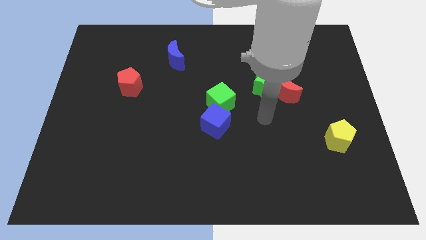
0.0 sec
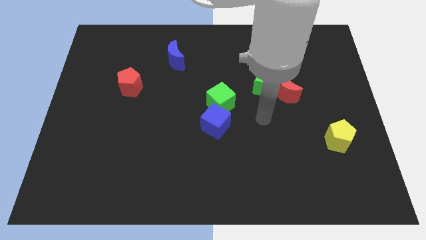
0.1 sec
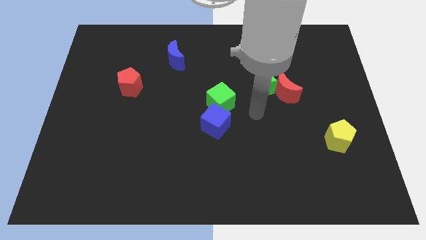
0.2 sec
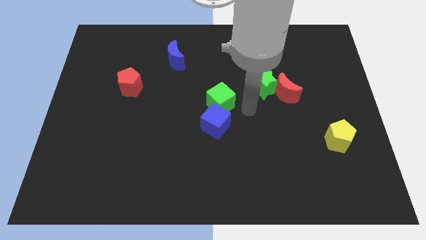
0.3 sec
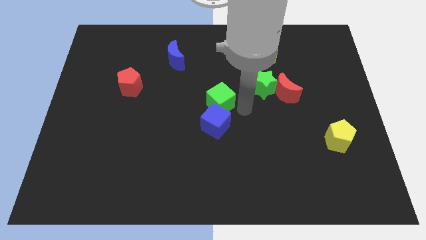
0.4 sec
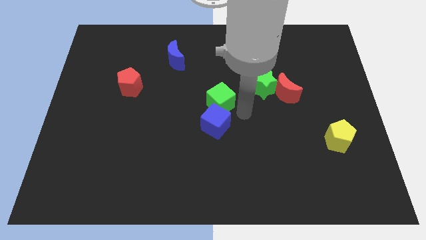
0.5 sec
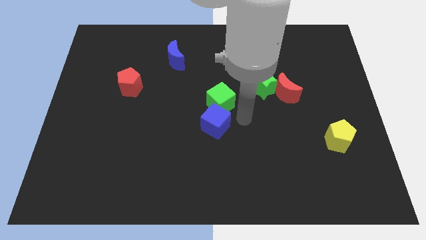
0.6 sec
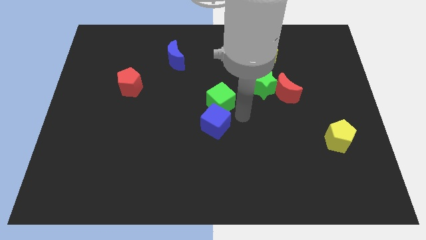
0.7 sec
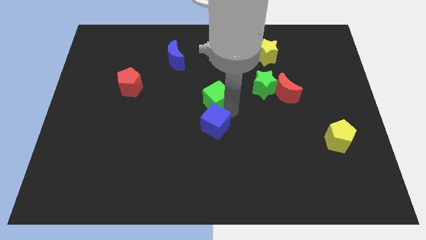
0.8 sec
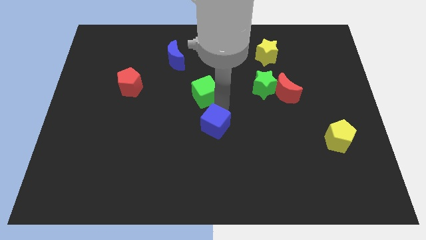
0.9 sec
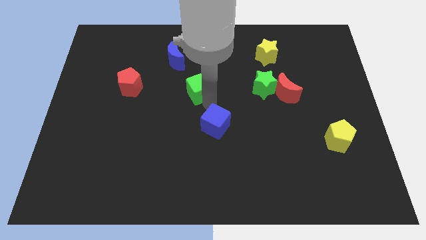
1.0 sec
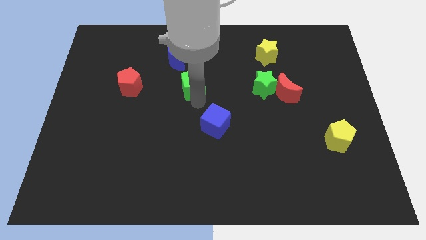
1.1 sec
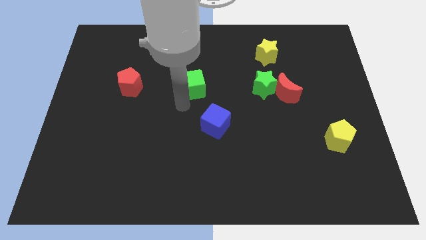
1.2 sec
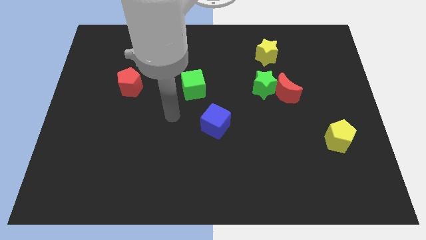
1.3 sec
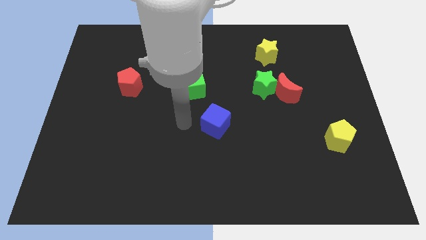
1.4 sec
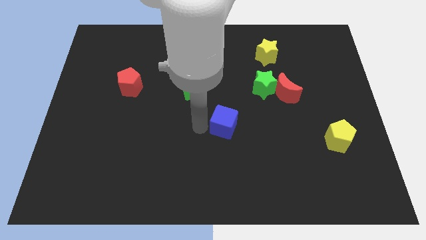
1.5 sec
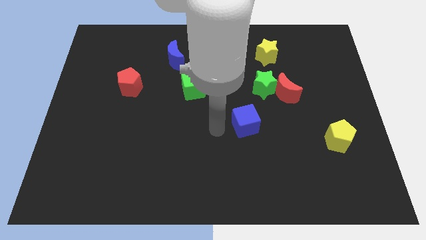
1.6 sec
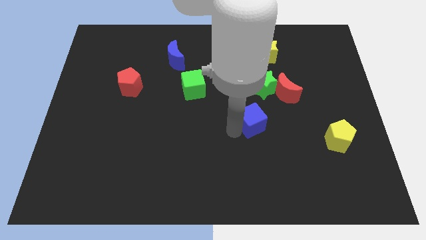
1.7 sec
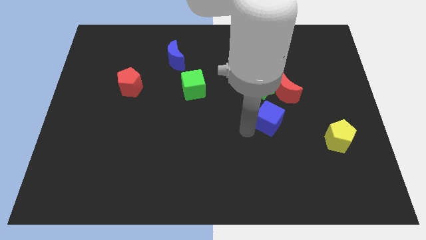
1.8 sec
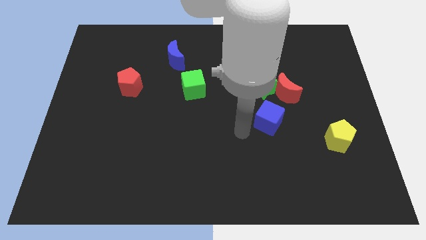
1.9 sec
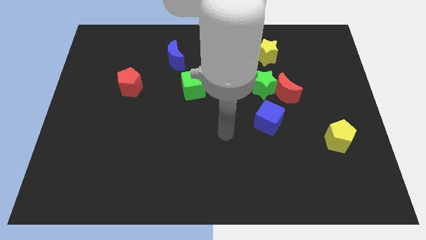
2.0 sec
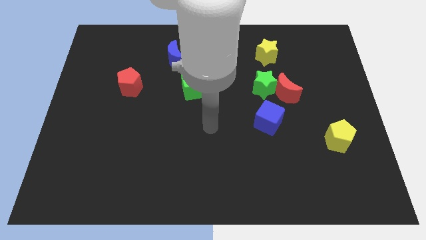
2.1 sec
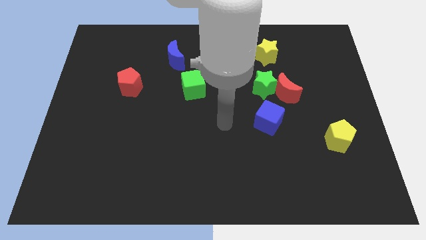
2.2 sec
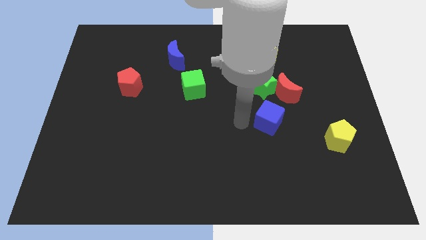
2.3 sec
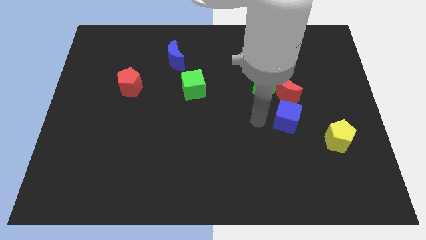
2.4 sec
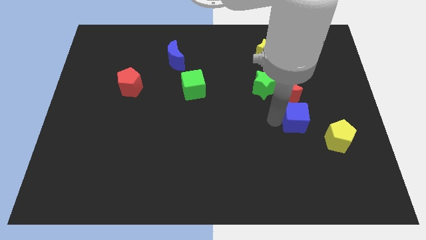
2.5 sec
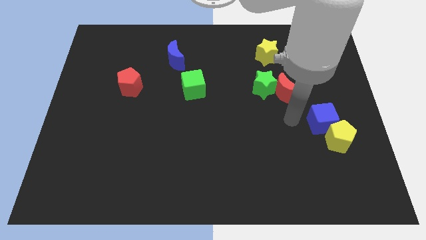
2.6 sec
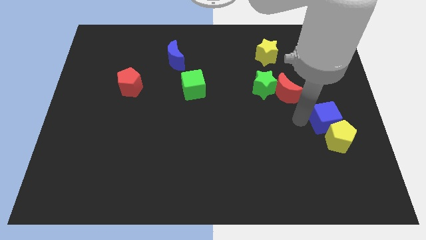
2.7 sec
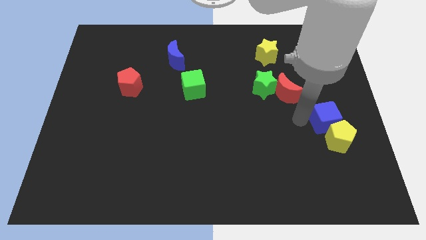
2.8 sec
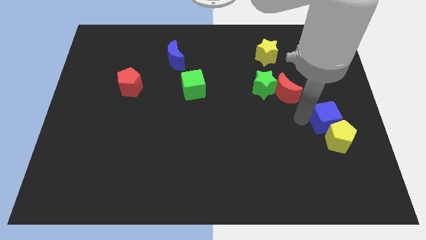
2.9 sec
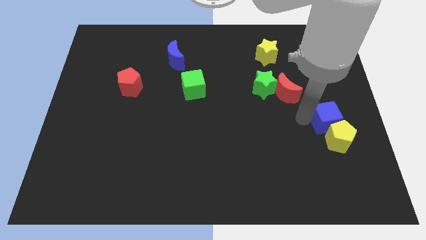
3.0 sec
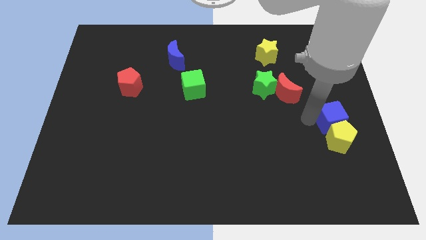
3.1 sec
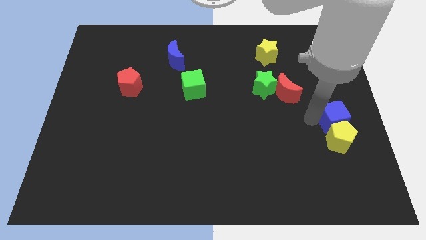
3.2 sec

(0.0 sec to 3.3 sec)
put the blue cube and yellow pentagon together

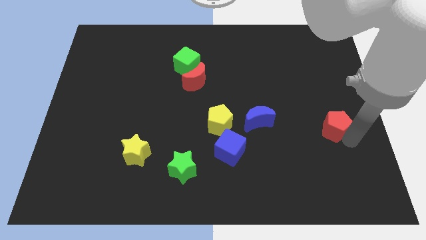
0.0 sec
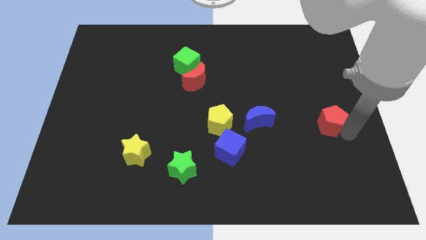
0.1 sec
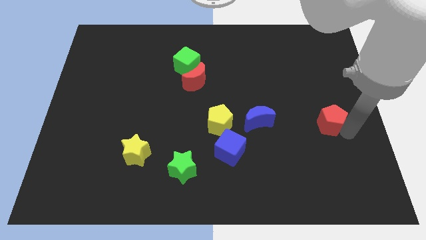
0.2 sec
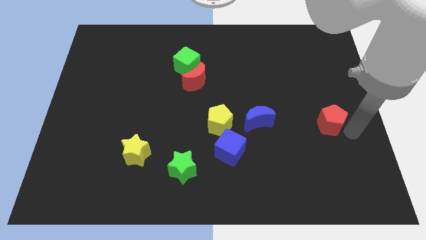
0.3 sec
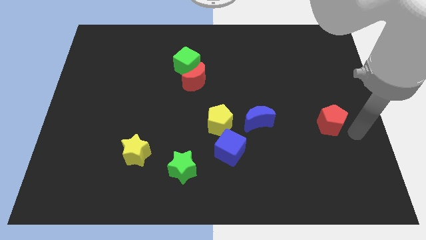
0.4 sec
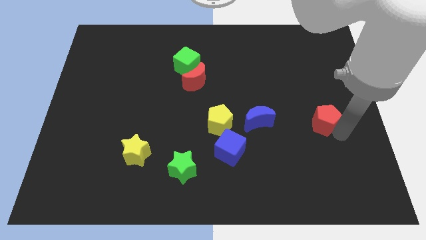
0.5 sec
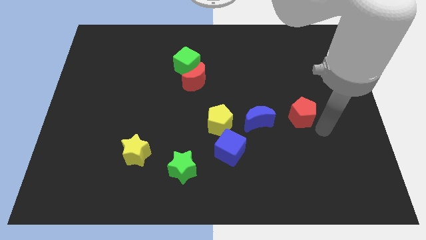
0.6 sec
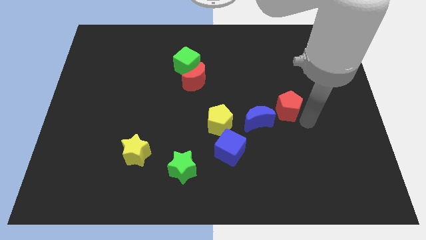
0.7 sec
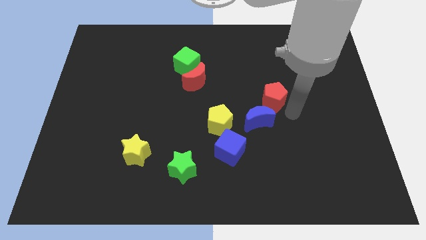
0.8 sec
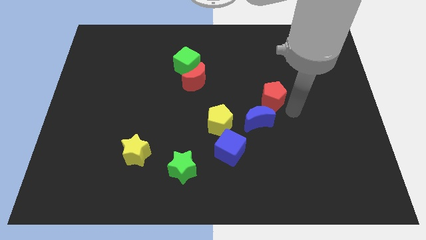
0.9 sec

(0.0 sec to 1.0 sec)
place the red pentagon diagonally to the blue moon

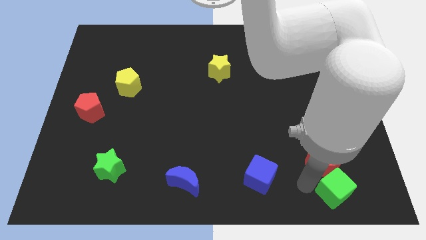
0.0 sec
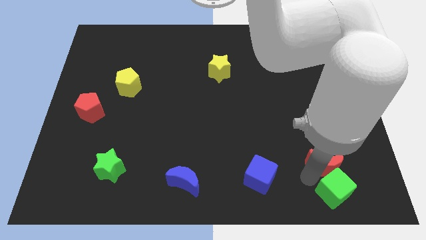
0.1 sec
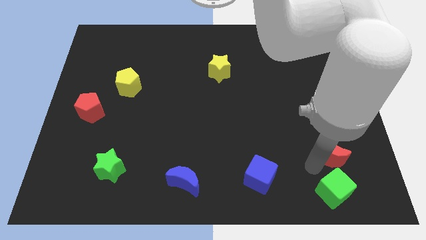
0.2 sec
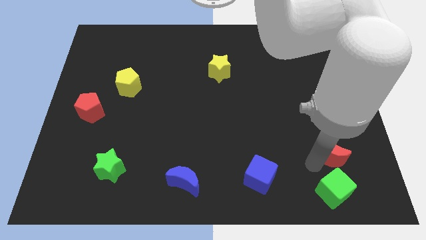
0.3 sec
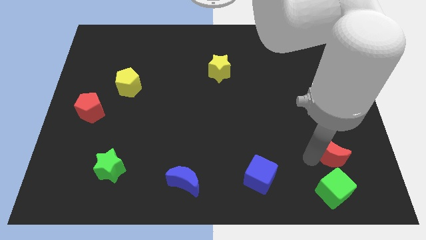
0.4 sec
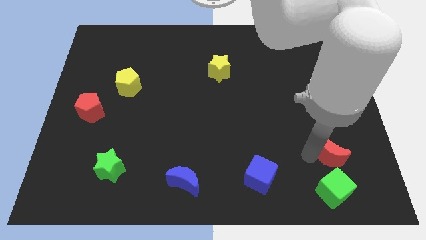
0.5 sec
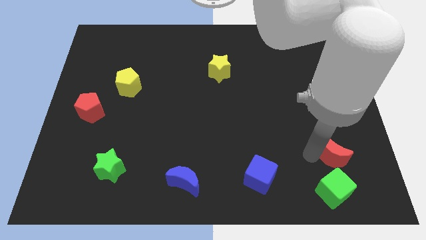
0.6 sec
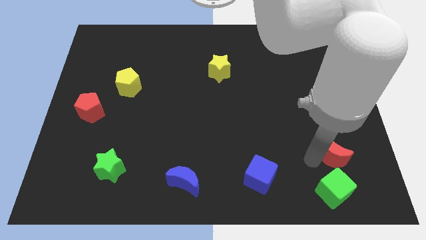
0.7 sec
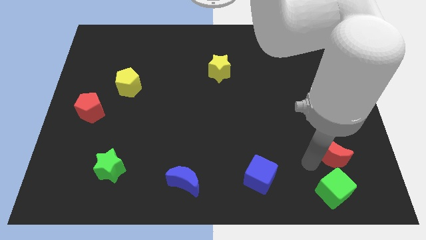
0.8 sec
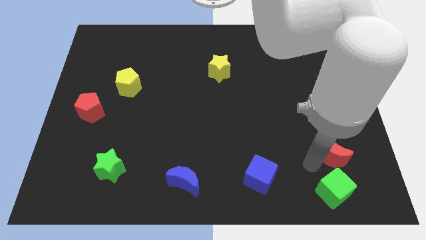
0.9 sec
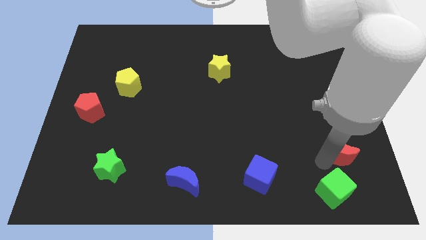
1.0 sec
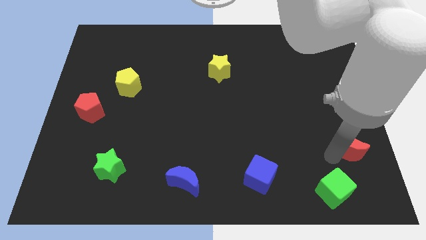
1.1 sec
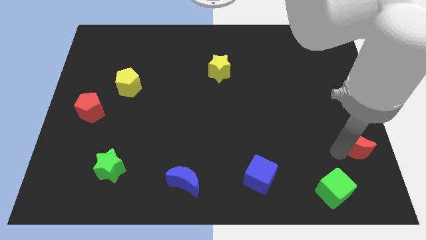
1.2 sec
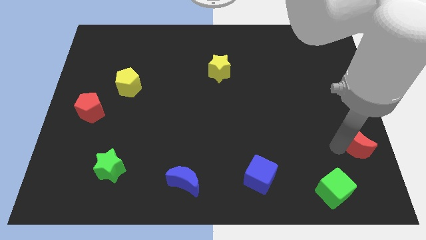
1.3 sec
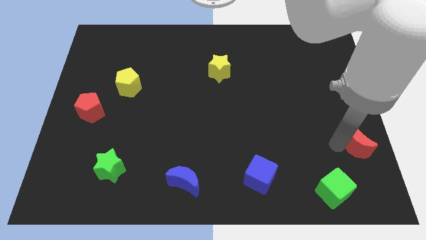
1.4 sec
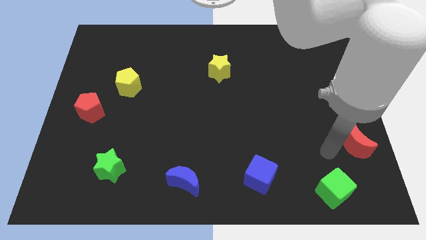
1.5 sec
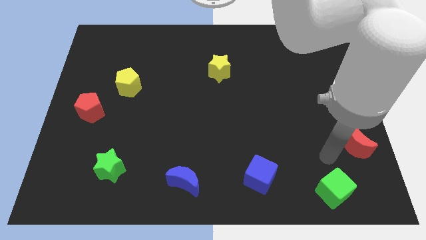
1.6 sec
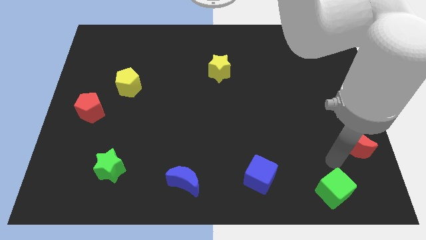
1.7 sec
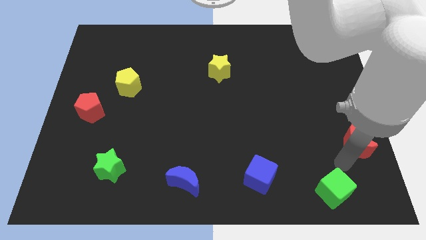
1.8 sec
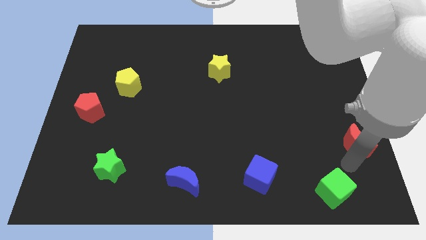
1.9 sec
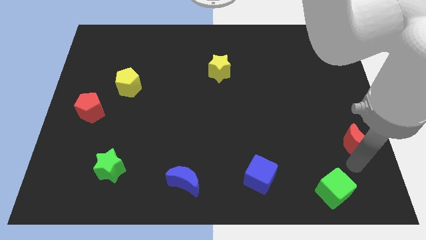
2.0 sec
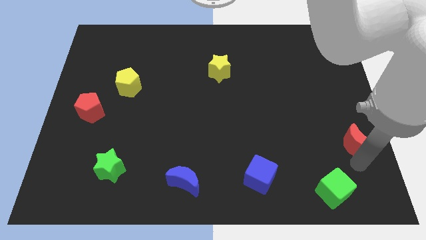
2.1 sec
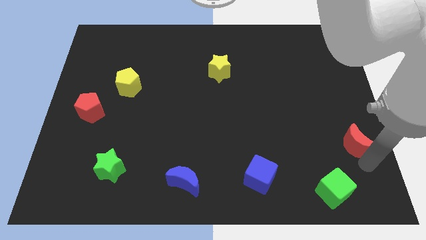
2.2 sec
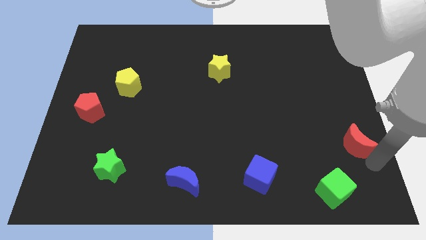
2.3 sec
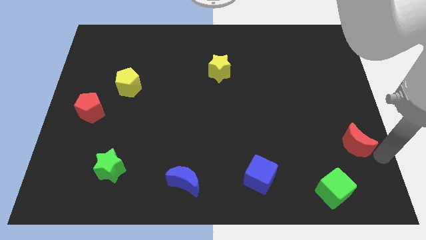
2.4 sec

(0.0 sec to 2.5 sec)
separate the red crescent from green cube

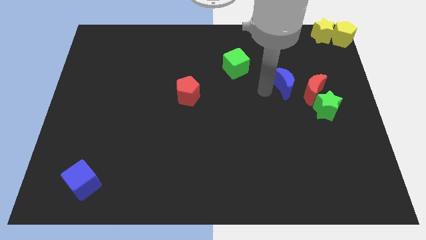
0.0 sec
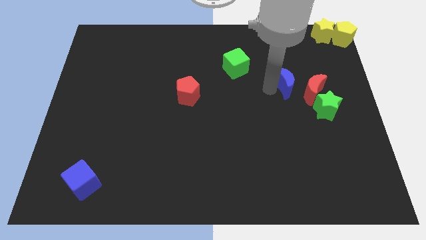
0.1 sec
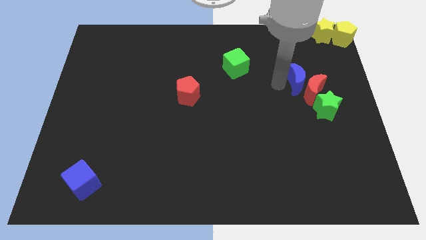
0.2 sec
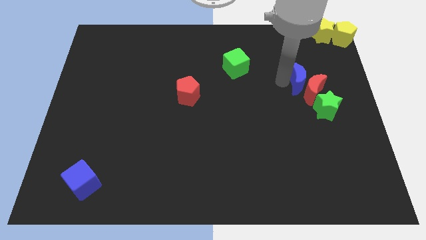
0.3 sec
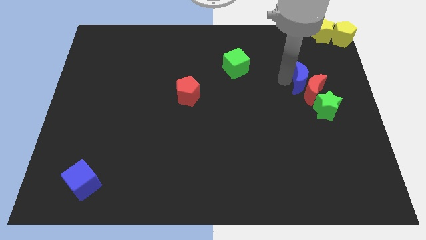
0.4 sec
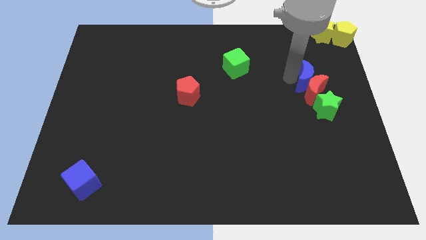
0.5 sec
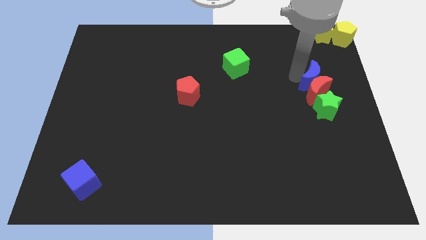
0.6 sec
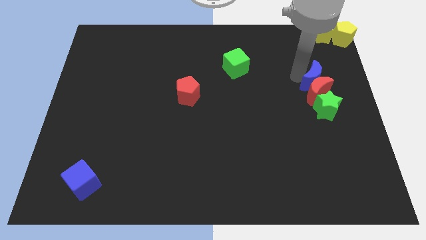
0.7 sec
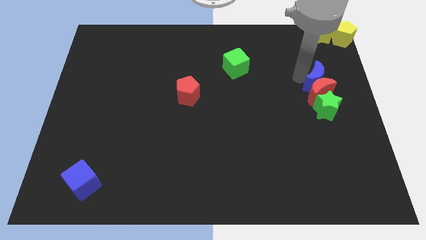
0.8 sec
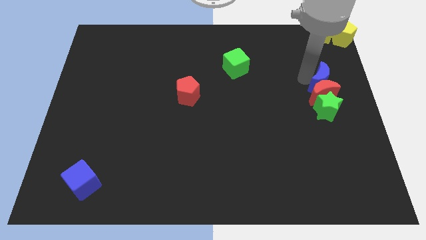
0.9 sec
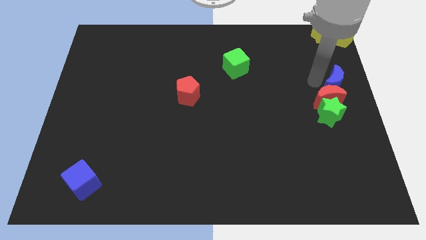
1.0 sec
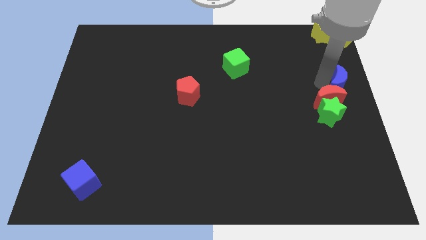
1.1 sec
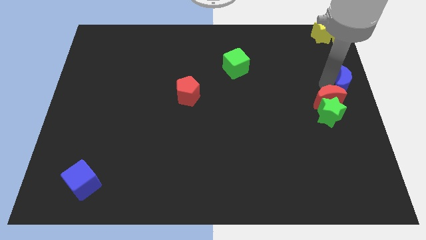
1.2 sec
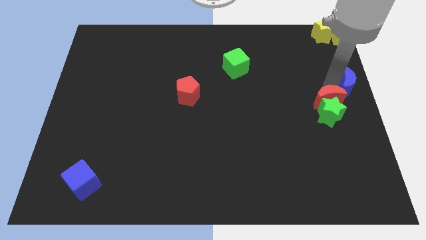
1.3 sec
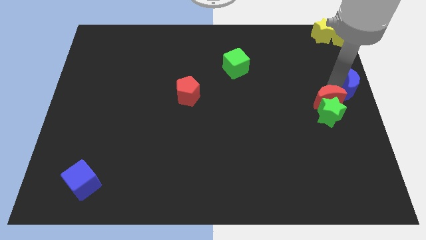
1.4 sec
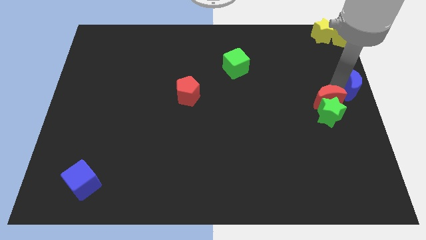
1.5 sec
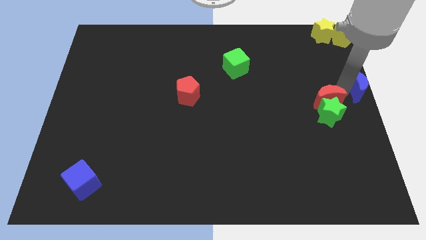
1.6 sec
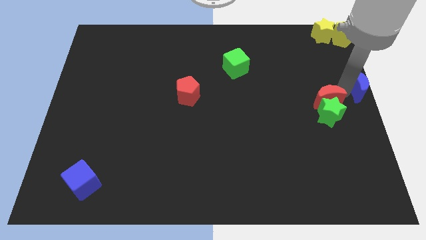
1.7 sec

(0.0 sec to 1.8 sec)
slightly move the blue moon to the right side of the board

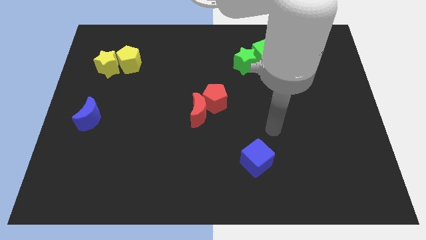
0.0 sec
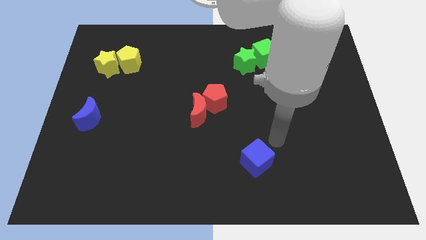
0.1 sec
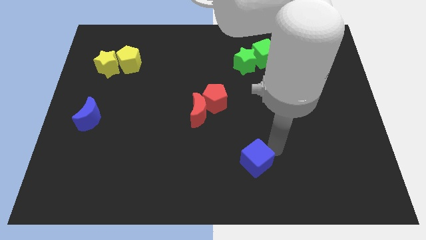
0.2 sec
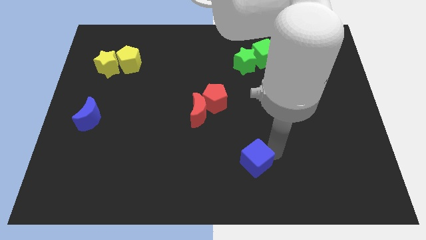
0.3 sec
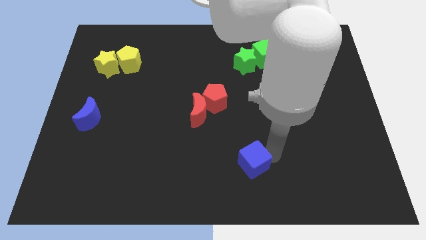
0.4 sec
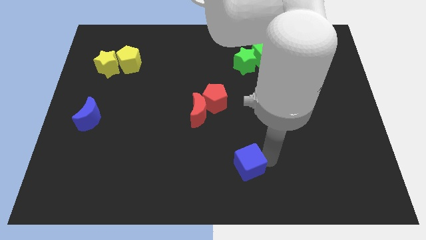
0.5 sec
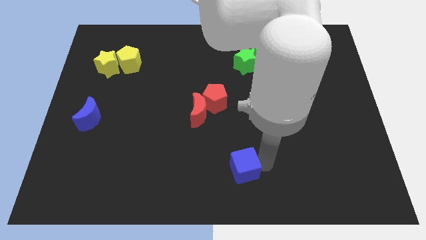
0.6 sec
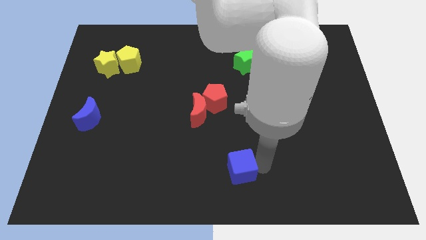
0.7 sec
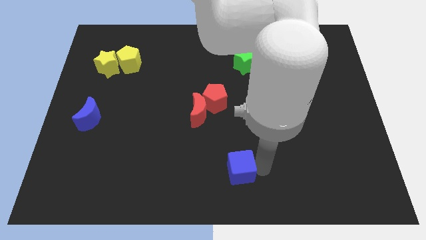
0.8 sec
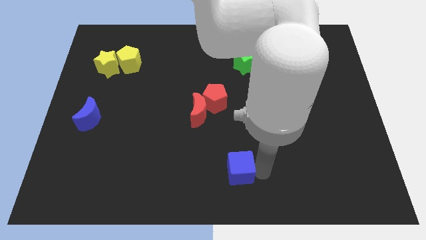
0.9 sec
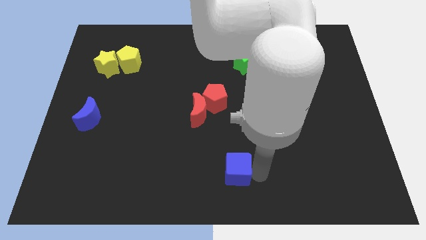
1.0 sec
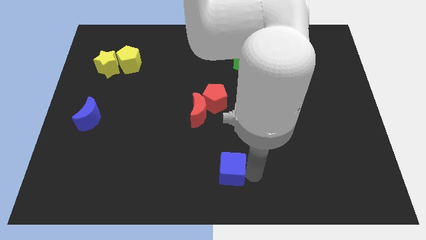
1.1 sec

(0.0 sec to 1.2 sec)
push blue cube slightly to the left of the board
